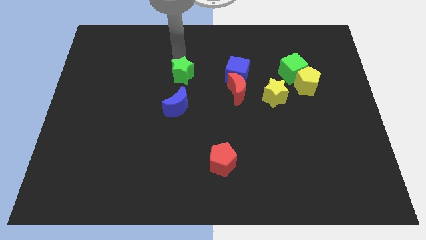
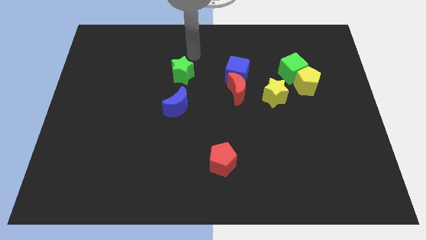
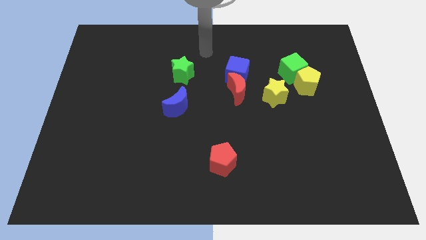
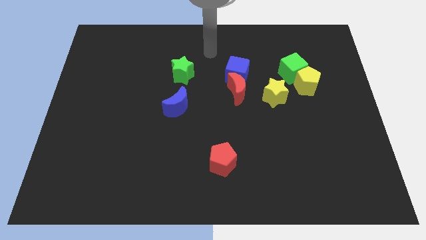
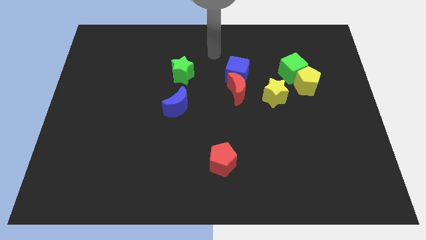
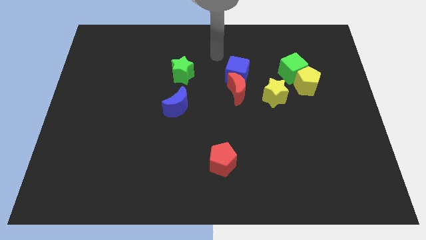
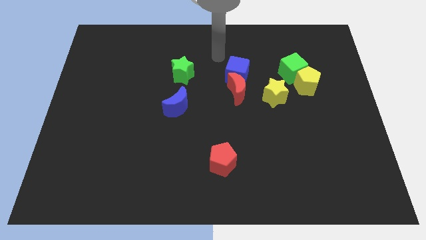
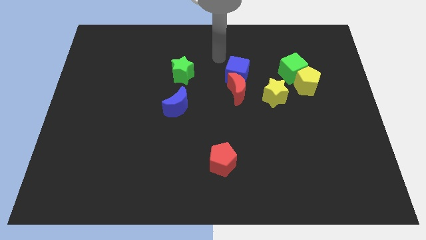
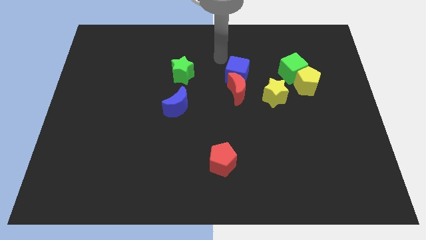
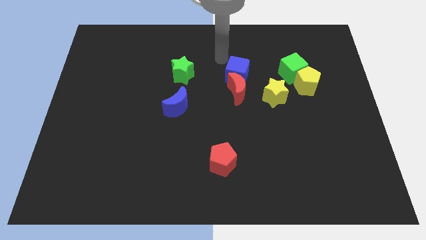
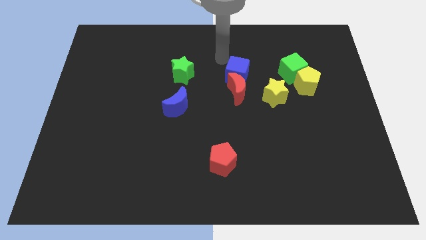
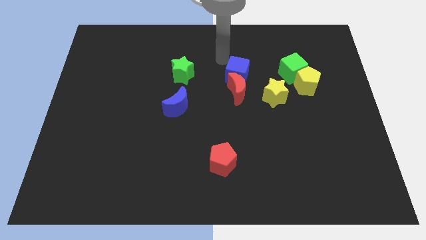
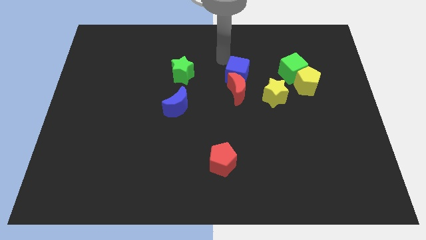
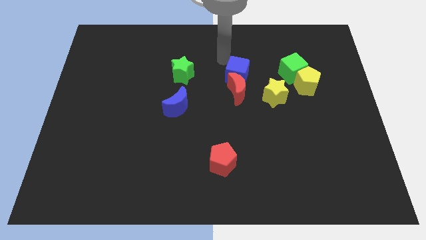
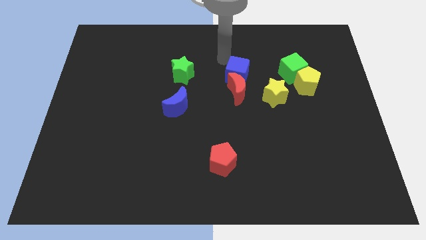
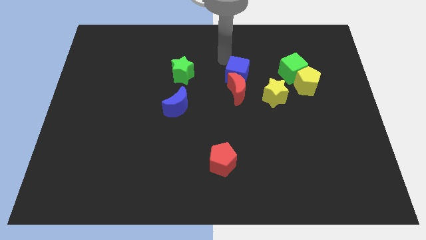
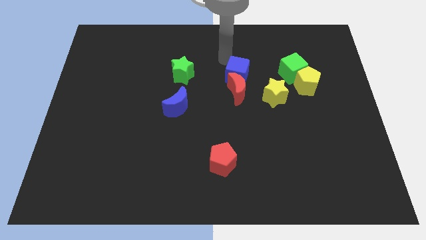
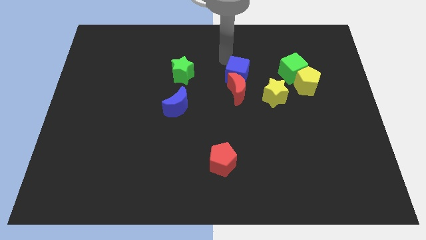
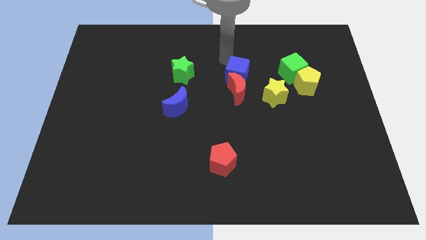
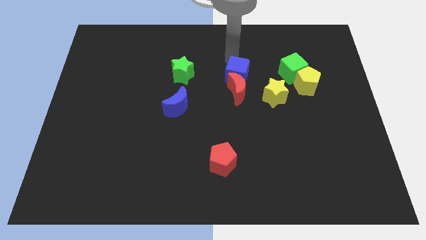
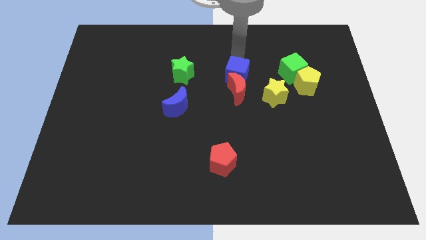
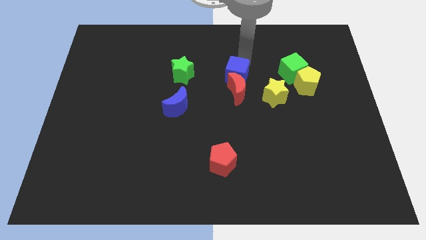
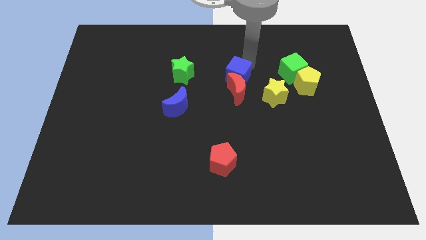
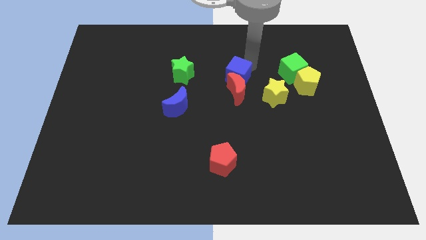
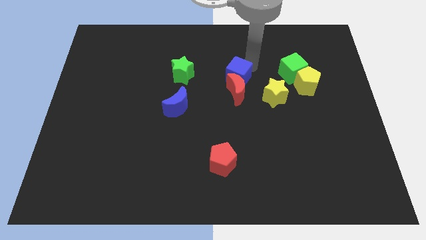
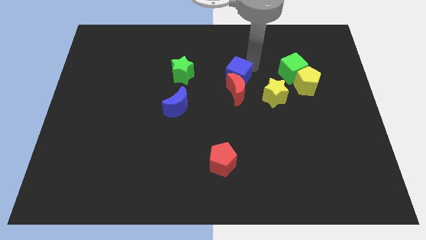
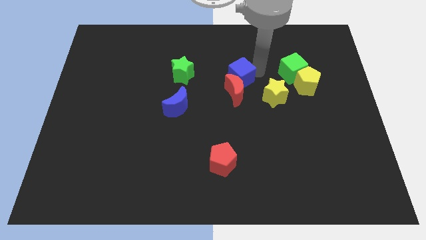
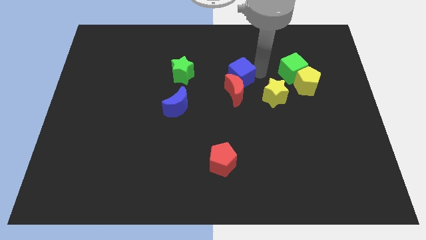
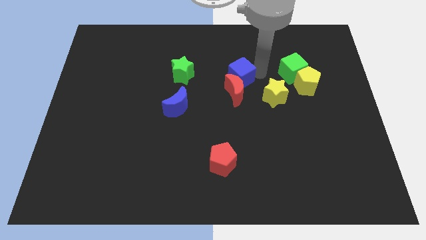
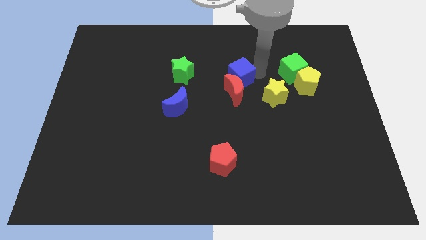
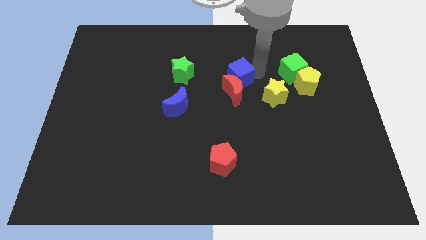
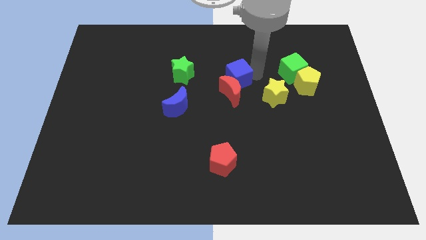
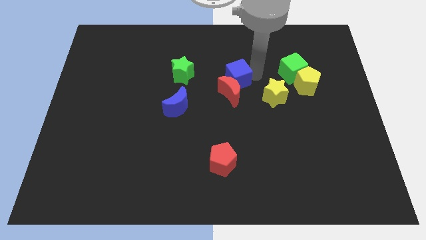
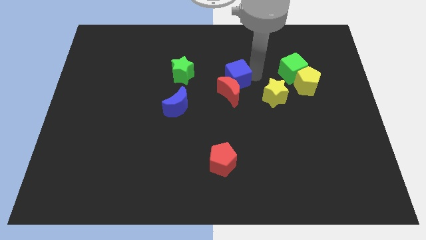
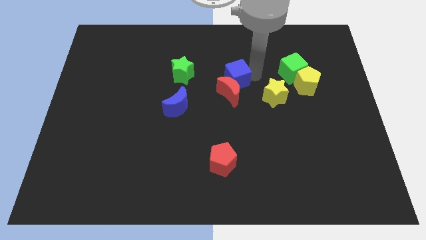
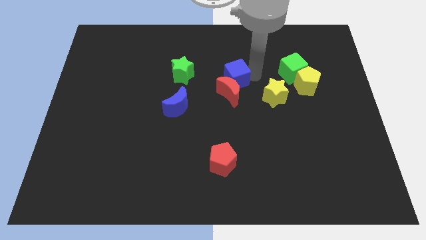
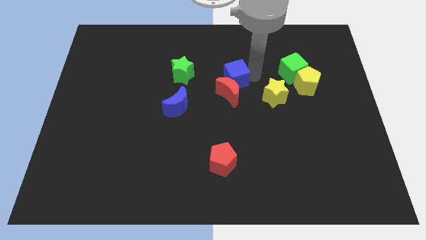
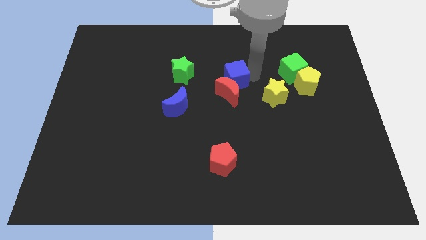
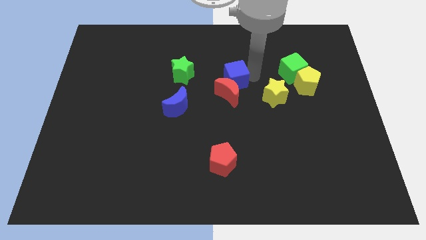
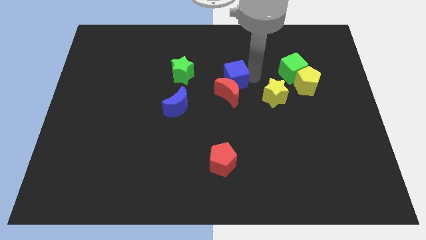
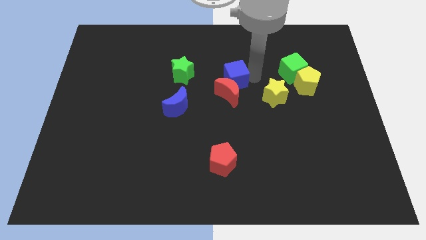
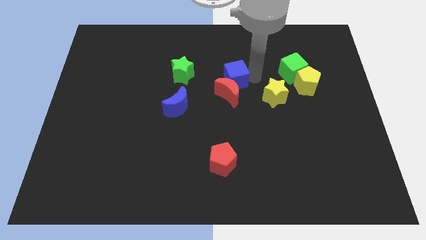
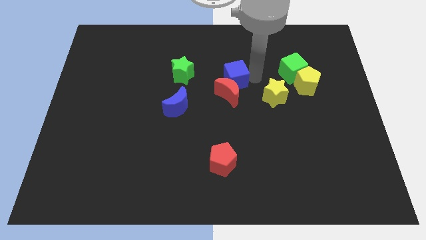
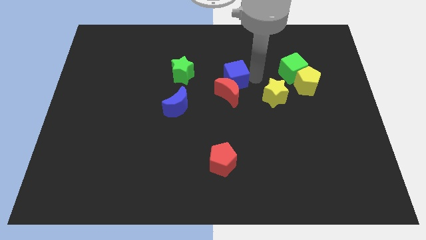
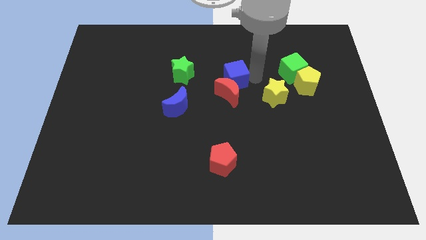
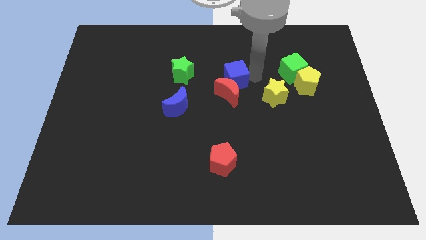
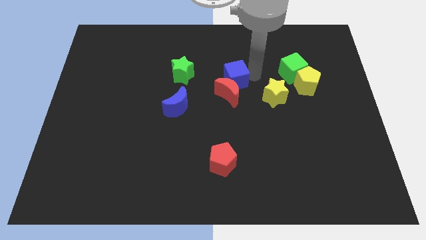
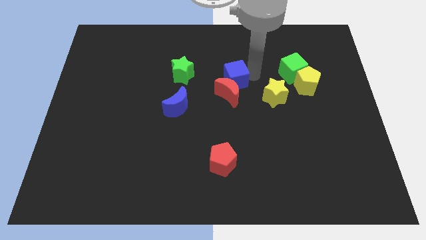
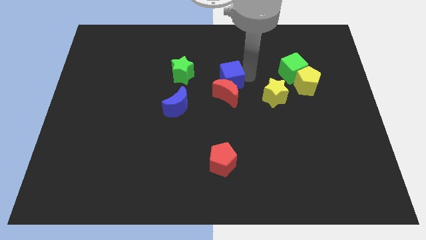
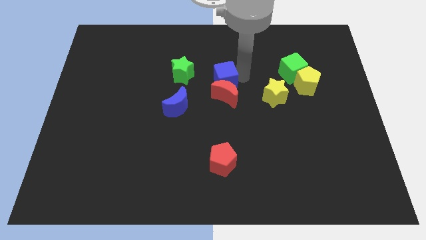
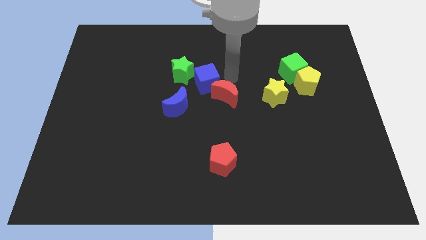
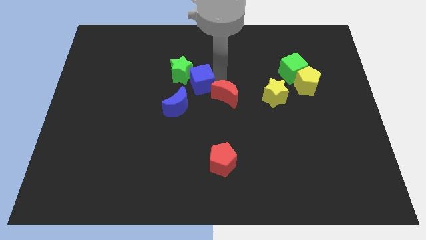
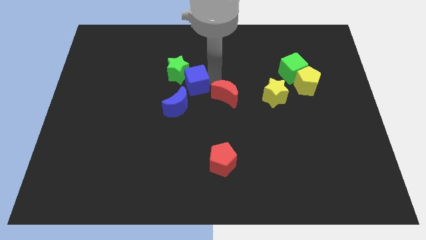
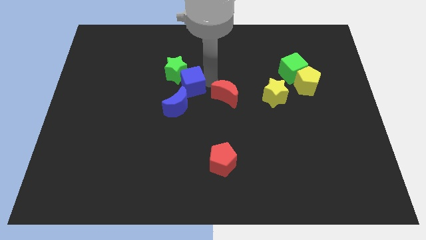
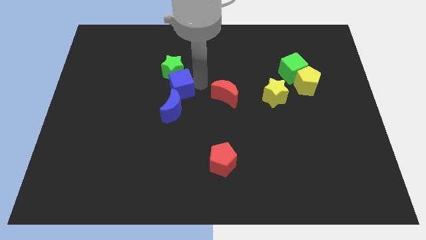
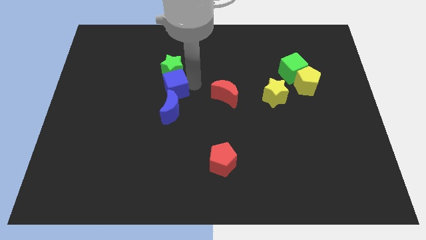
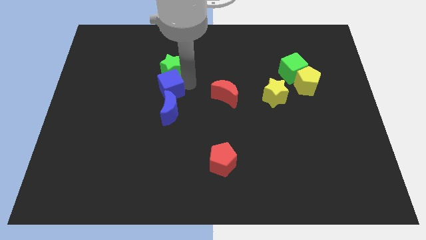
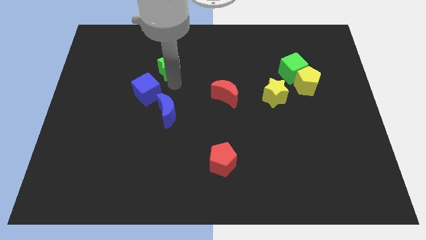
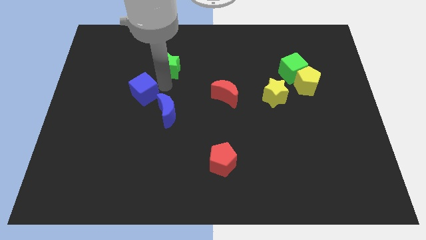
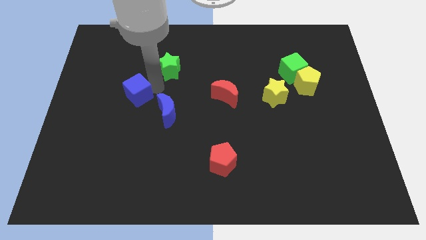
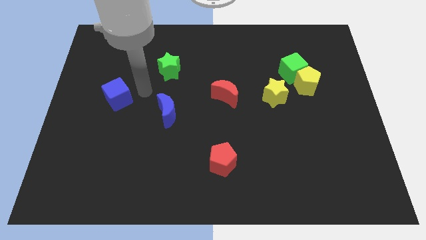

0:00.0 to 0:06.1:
push the blue cube into the green star and blue moon

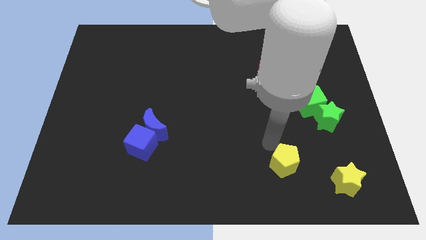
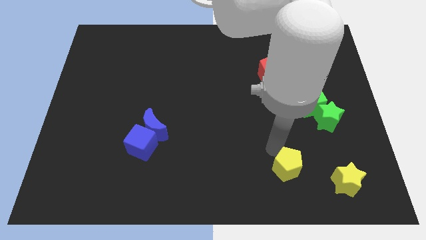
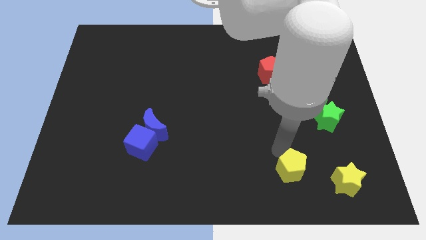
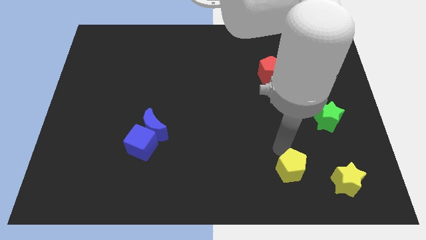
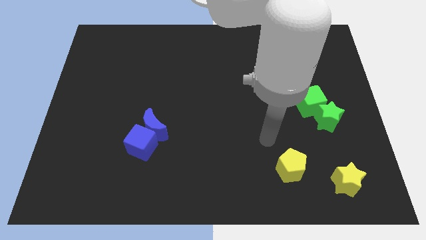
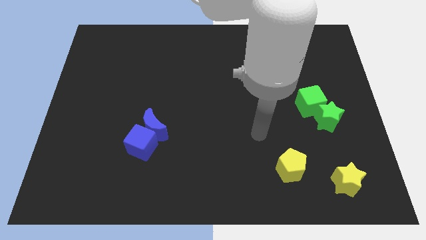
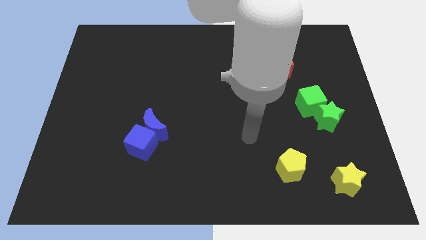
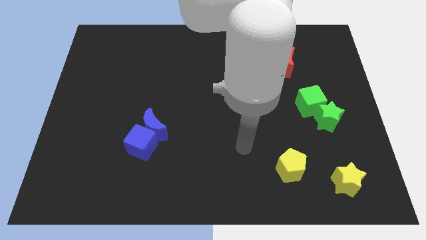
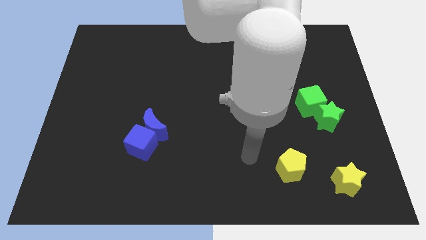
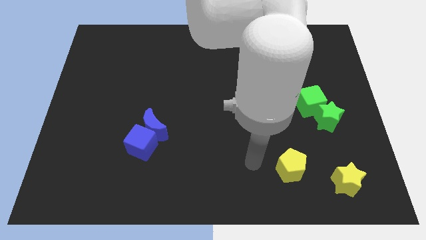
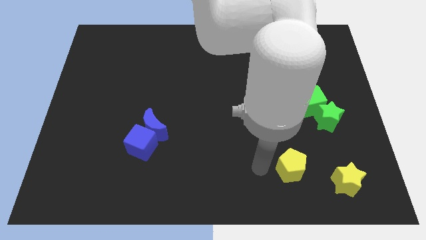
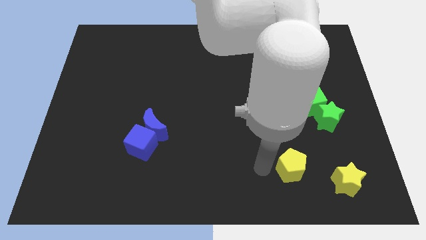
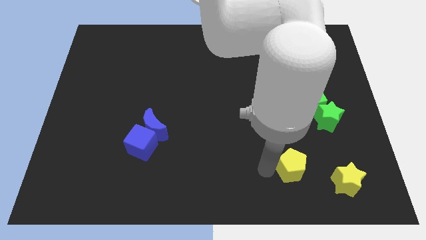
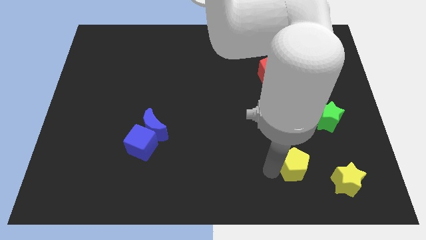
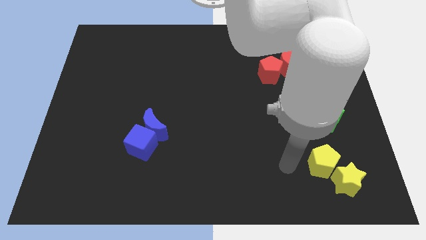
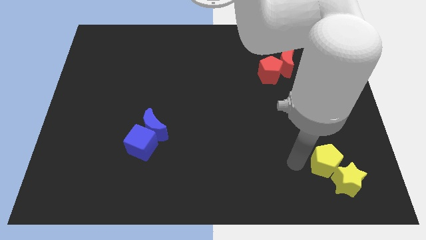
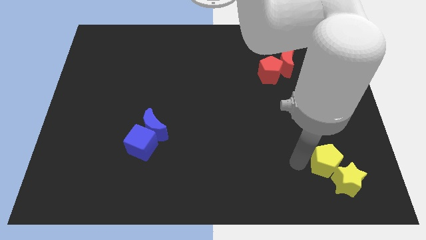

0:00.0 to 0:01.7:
move the yellow pentagon into the yellow star

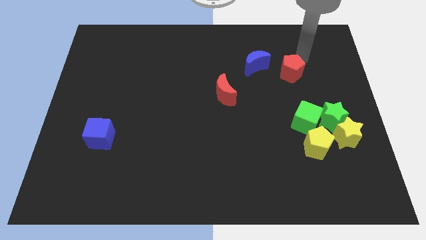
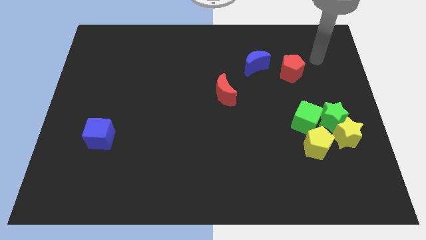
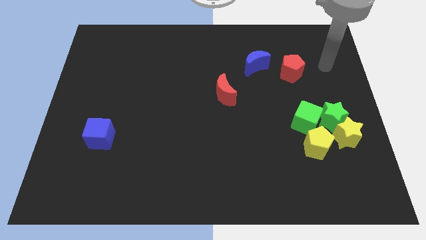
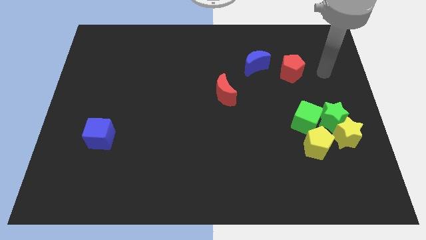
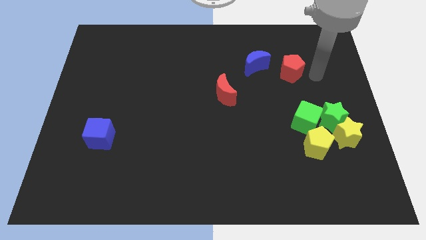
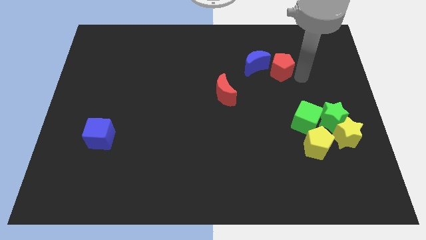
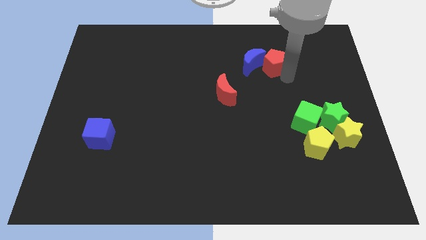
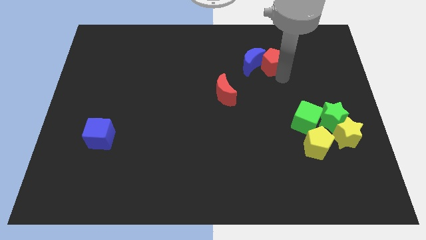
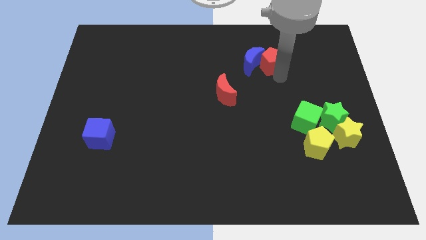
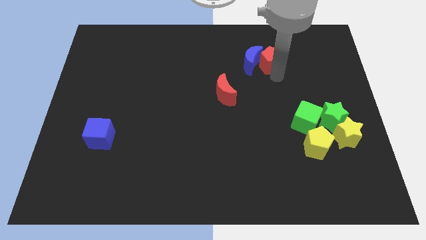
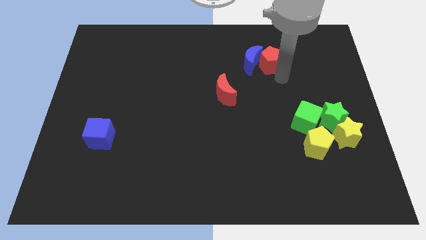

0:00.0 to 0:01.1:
push the red pentagon into the right side of the blue moon
